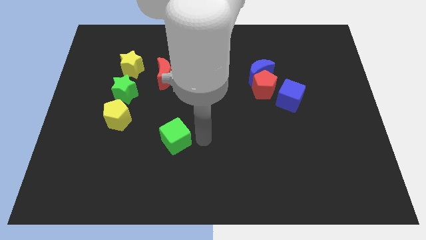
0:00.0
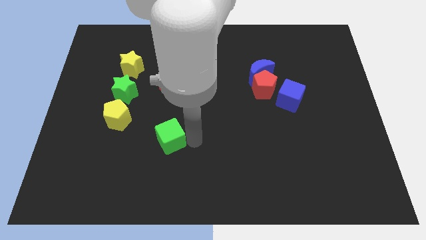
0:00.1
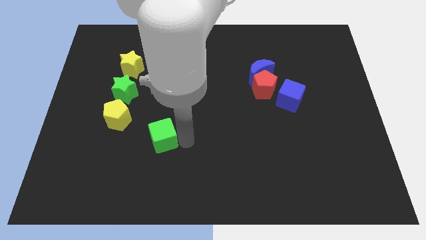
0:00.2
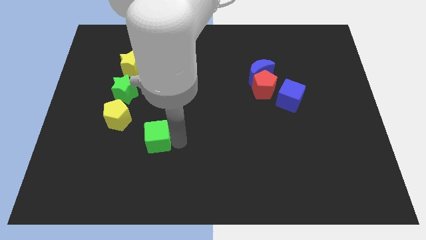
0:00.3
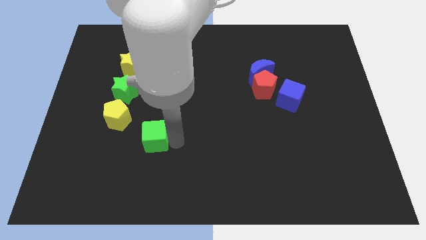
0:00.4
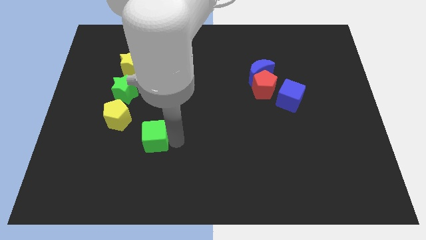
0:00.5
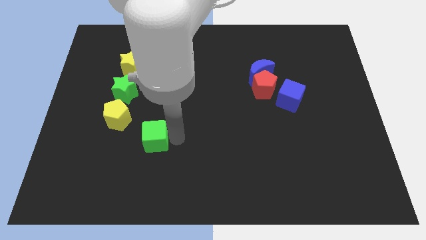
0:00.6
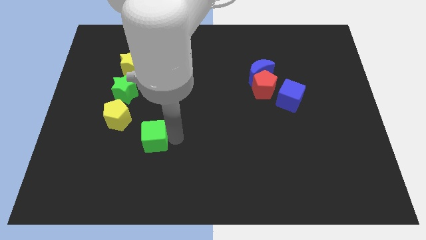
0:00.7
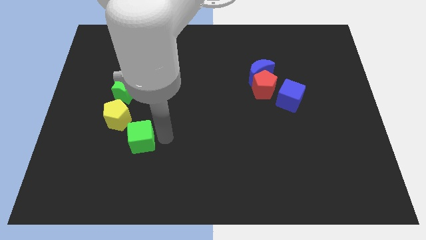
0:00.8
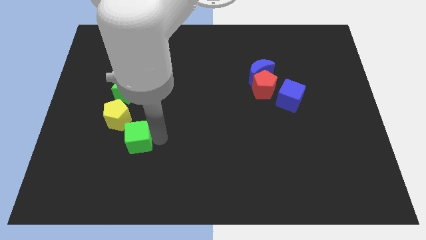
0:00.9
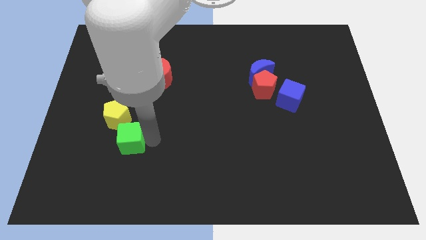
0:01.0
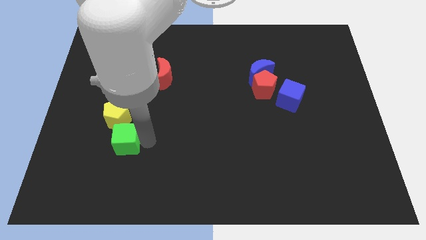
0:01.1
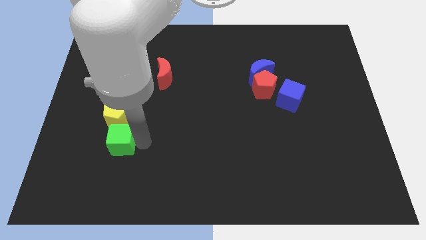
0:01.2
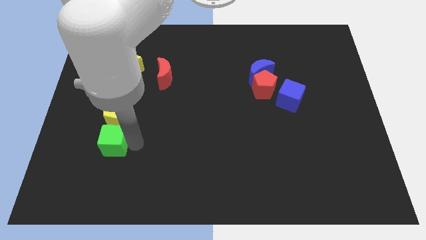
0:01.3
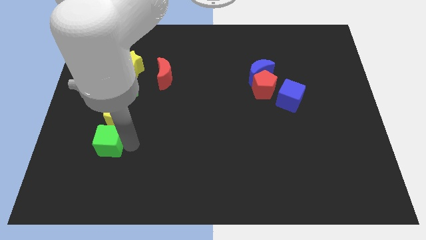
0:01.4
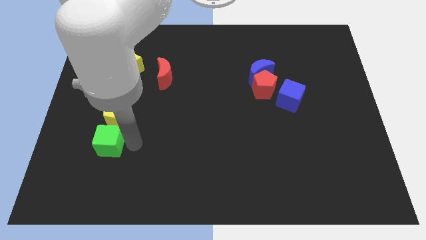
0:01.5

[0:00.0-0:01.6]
move the green cube below the yellow pentagon

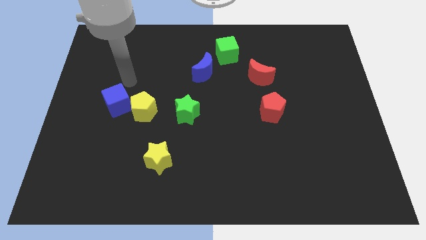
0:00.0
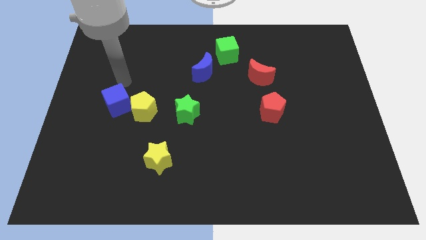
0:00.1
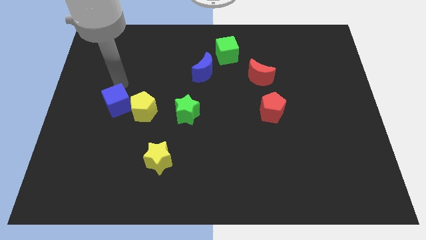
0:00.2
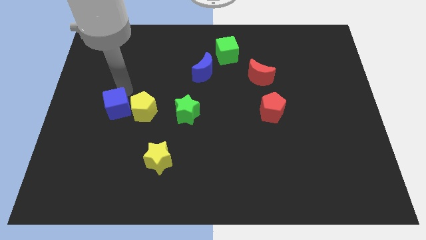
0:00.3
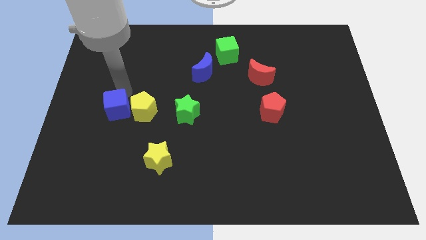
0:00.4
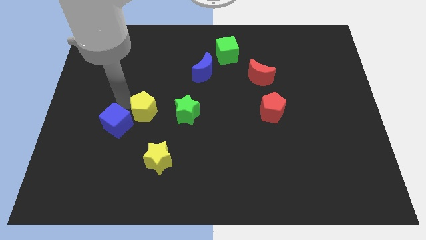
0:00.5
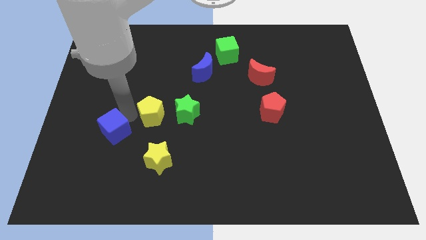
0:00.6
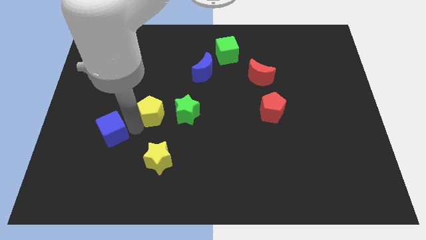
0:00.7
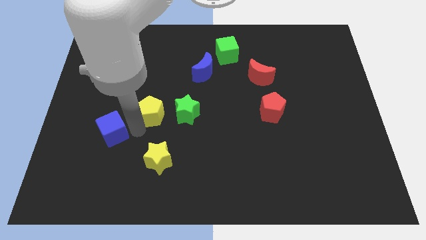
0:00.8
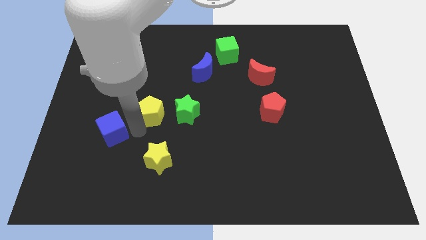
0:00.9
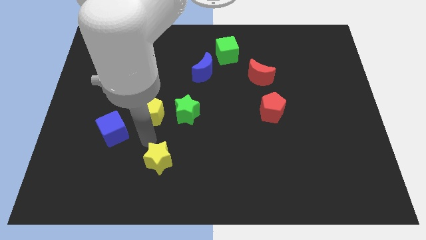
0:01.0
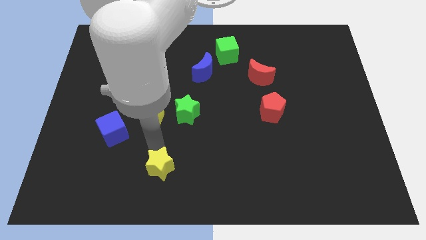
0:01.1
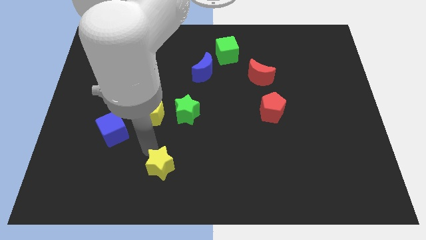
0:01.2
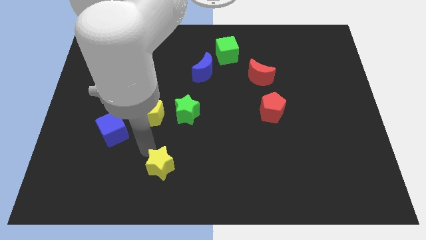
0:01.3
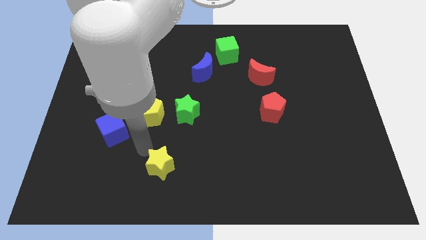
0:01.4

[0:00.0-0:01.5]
separate the blue cube from the yellow pentagon

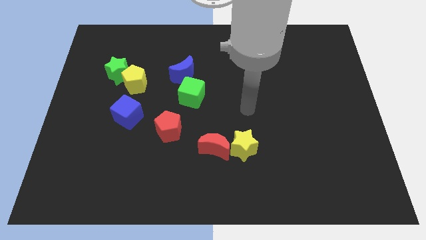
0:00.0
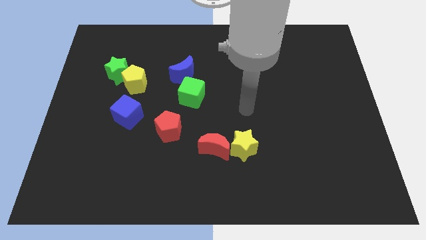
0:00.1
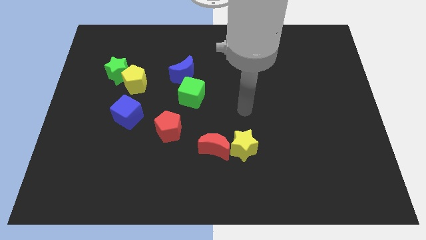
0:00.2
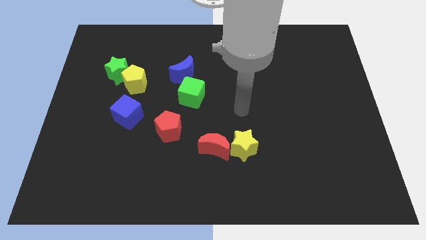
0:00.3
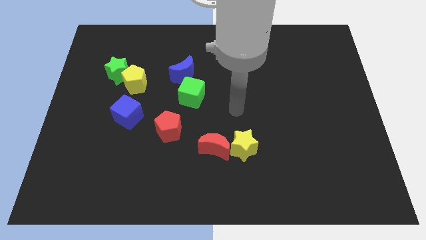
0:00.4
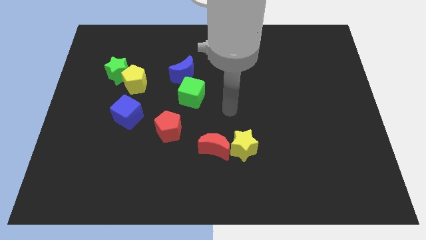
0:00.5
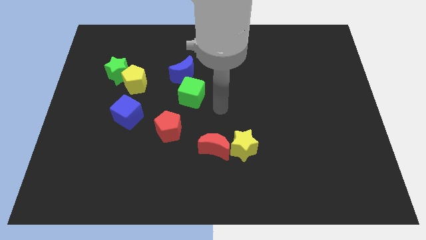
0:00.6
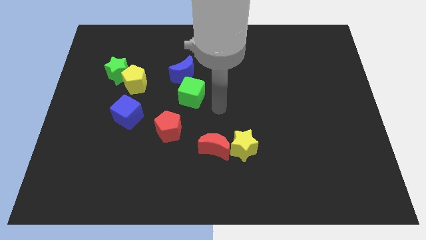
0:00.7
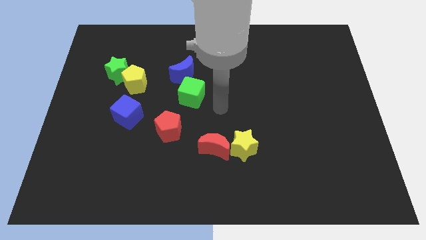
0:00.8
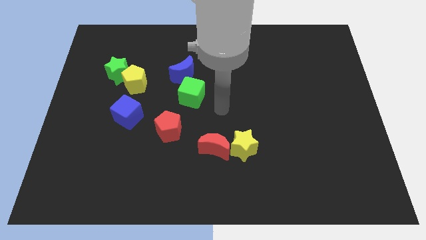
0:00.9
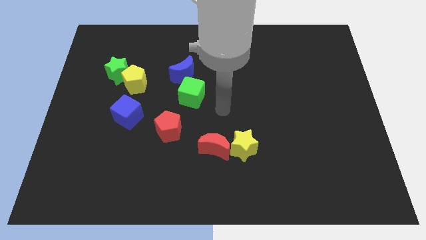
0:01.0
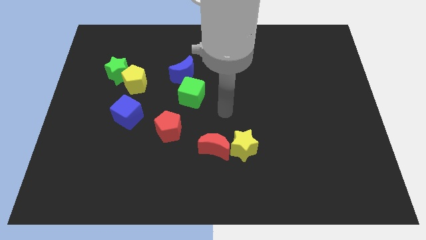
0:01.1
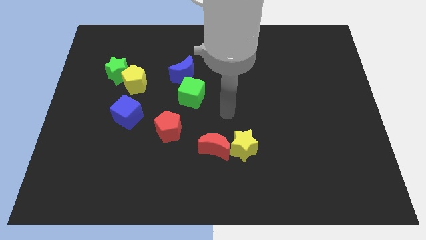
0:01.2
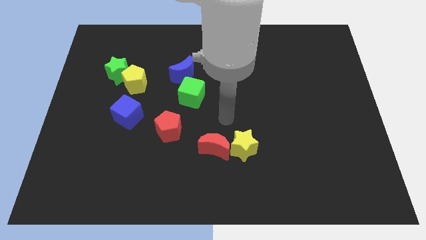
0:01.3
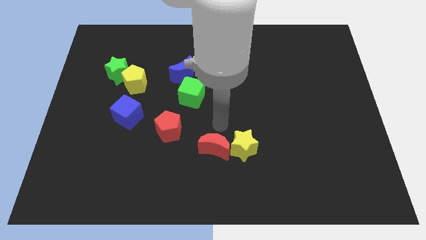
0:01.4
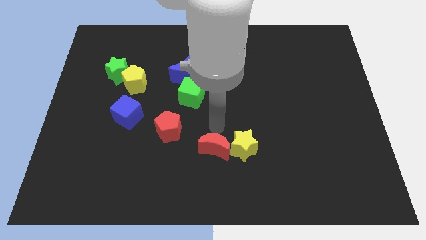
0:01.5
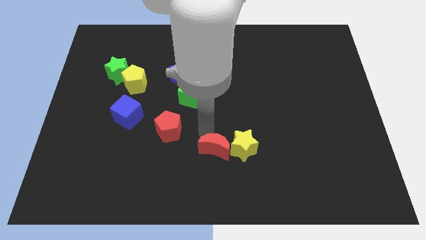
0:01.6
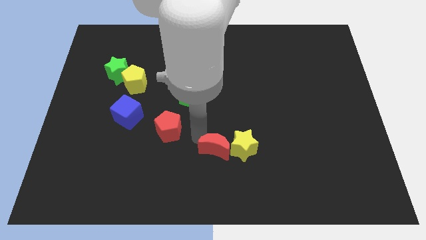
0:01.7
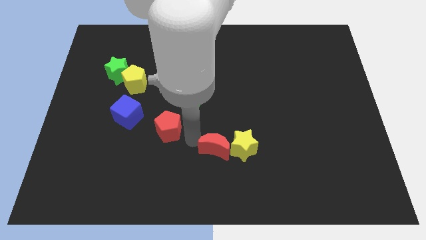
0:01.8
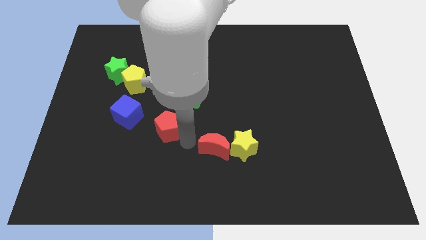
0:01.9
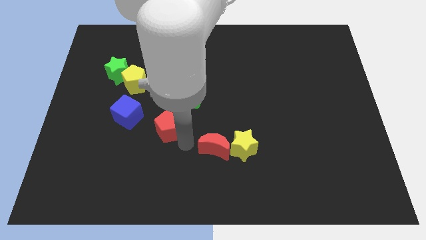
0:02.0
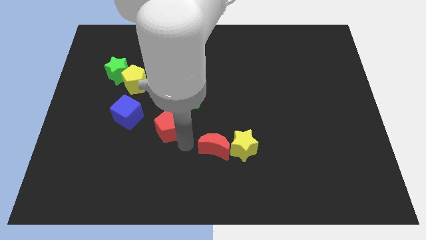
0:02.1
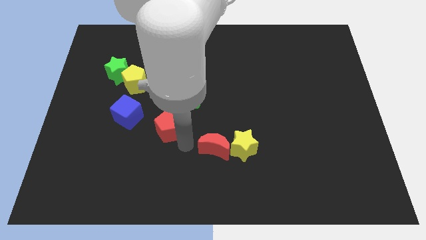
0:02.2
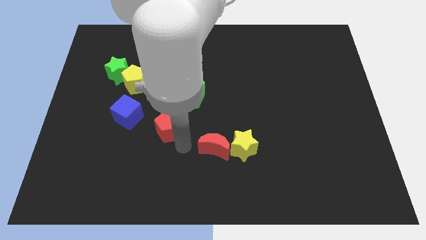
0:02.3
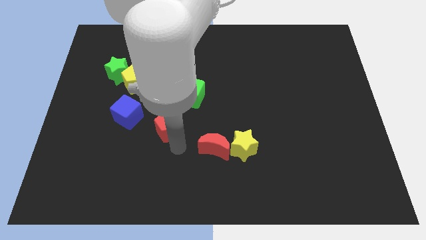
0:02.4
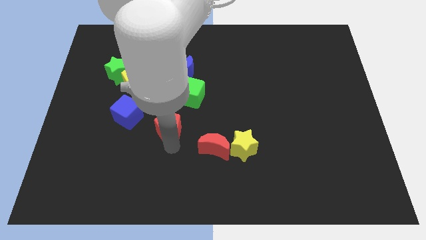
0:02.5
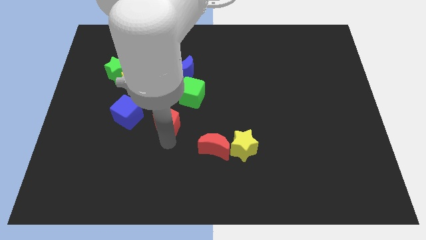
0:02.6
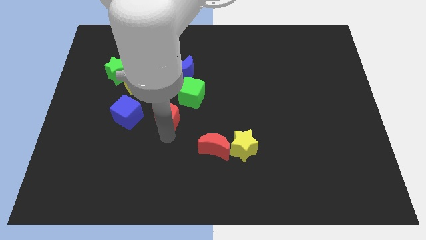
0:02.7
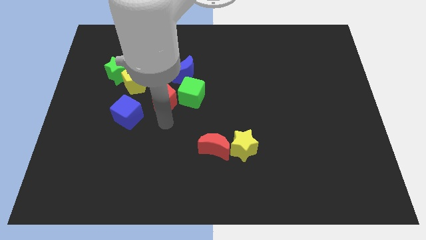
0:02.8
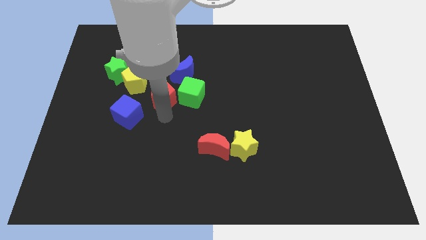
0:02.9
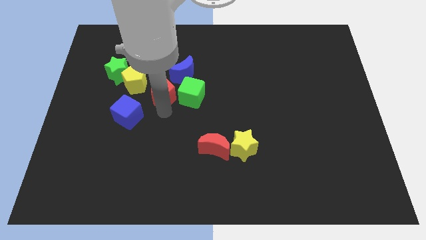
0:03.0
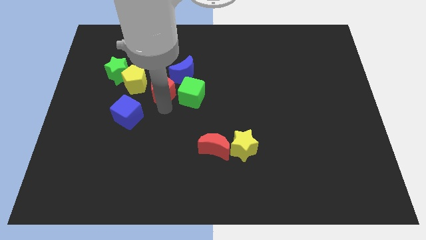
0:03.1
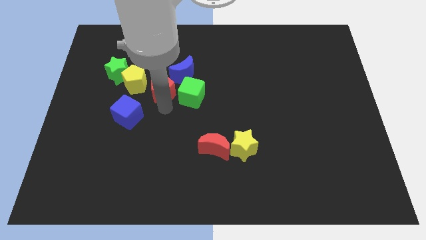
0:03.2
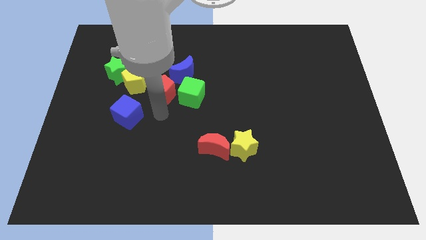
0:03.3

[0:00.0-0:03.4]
move the red pentagon to the left of green cube

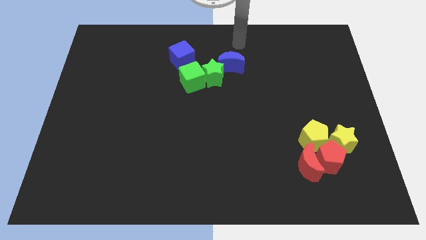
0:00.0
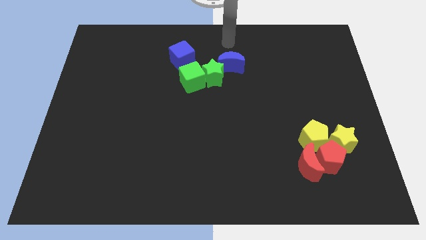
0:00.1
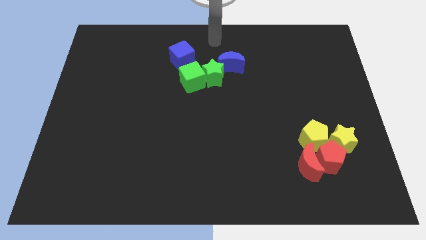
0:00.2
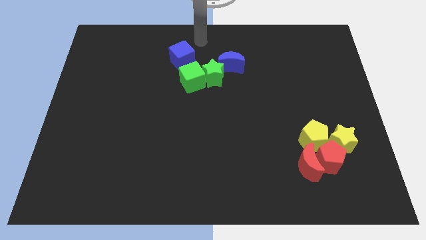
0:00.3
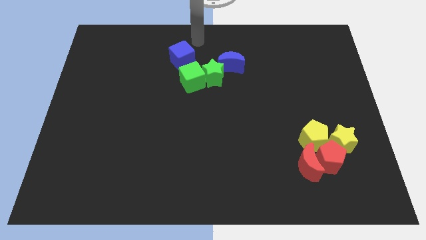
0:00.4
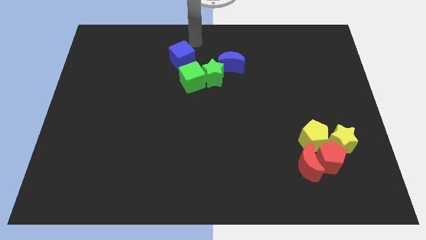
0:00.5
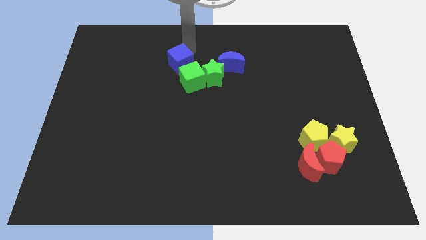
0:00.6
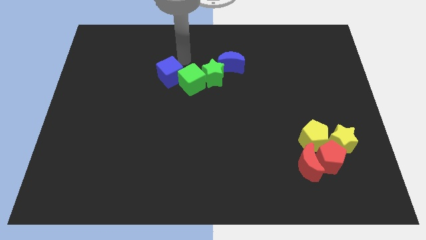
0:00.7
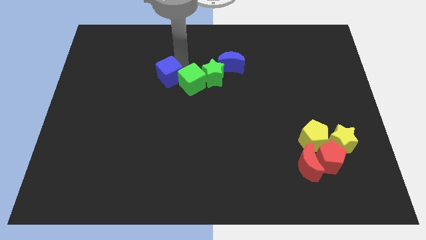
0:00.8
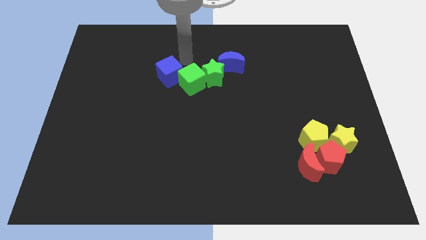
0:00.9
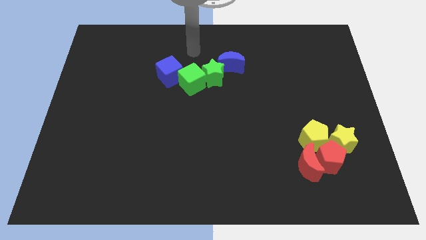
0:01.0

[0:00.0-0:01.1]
go and push the blue cube into the top left of the green cube

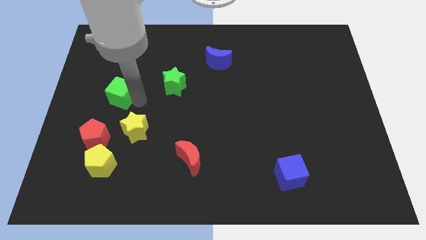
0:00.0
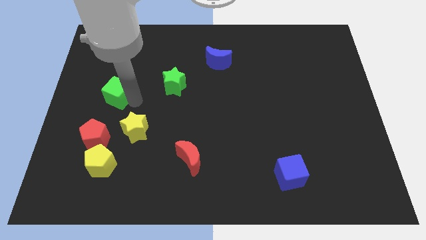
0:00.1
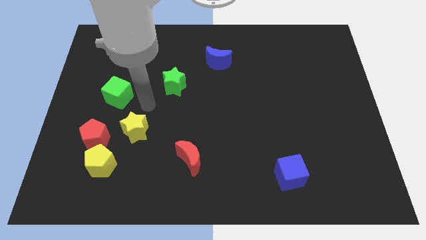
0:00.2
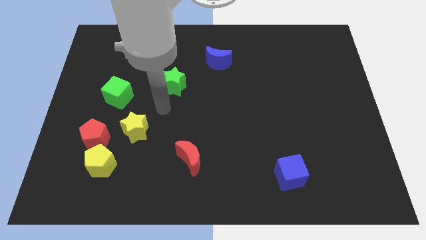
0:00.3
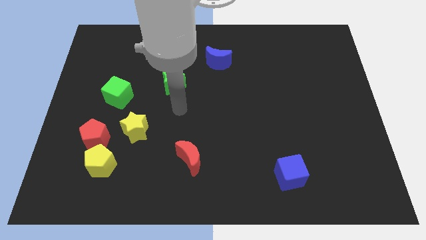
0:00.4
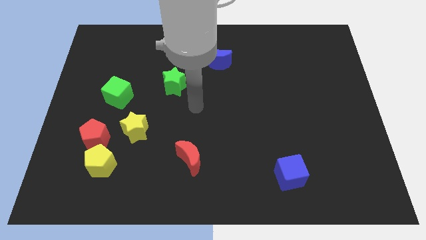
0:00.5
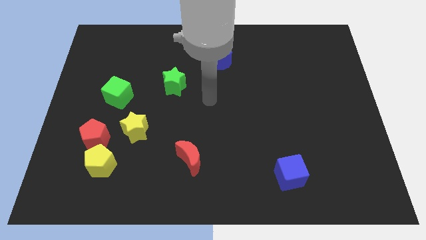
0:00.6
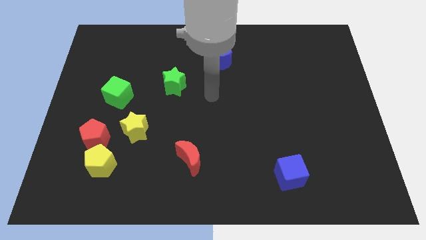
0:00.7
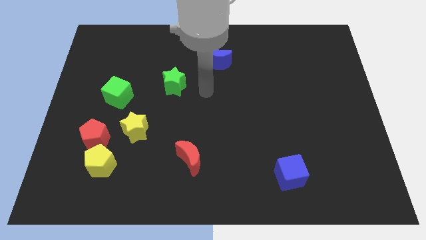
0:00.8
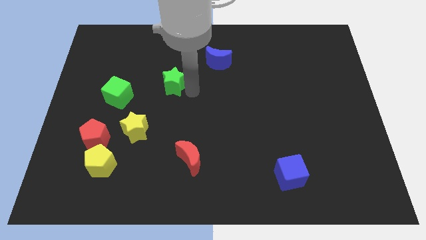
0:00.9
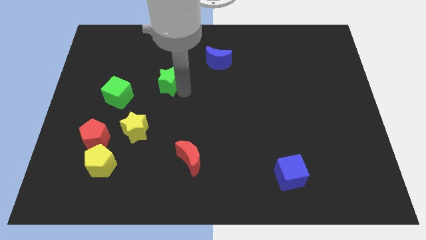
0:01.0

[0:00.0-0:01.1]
tap the green cube

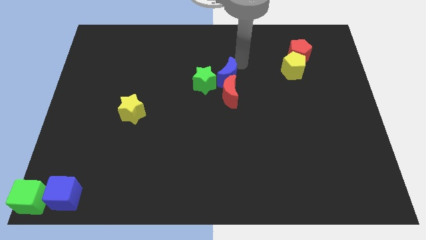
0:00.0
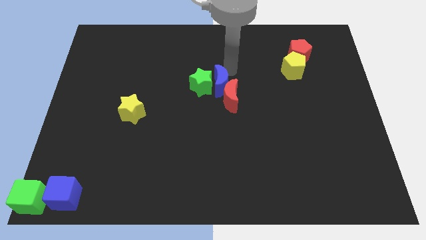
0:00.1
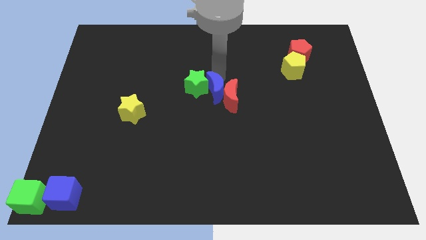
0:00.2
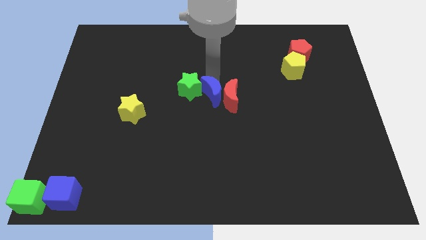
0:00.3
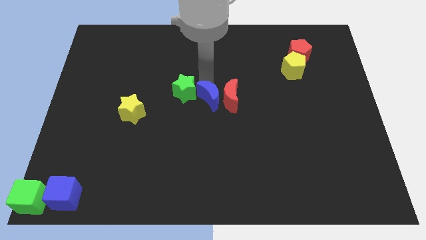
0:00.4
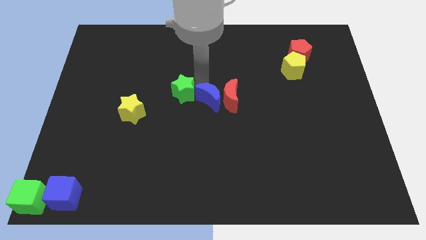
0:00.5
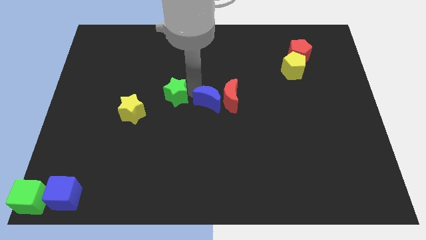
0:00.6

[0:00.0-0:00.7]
place the blue crescent in between the green star and the red crescent
